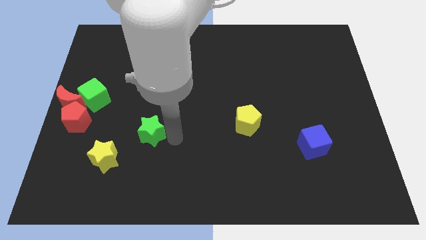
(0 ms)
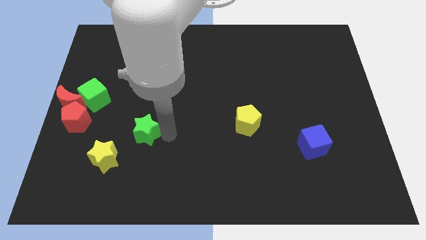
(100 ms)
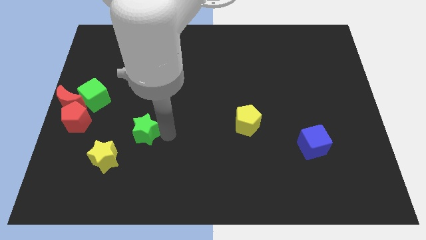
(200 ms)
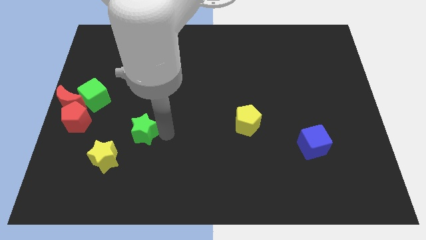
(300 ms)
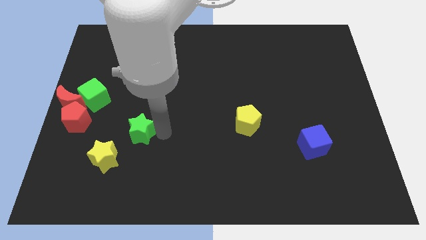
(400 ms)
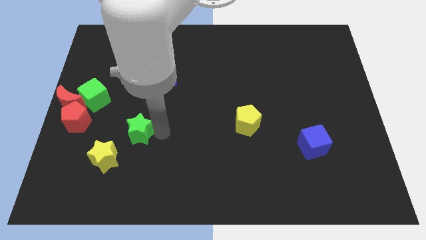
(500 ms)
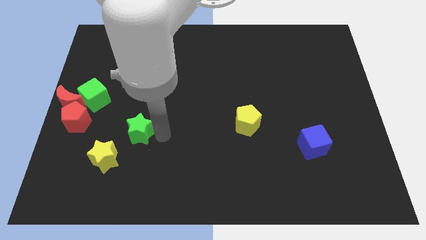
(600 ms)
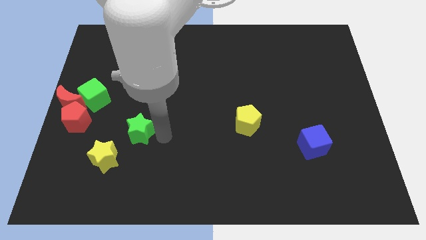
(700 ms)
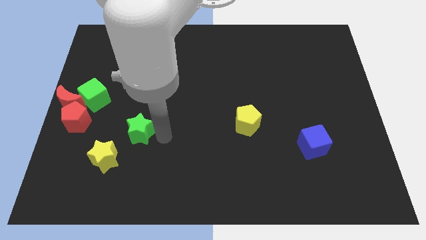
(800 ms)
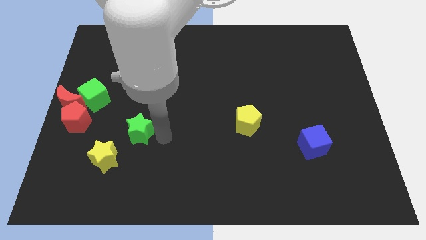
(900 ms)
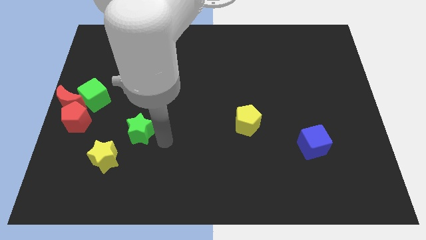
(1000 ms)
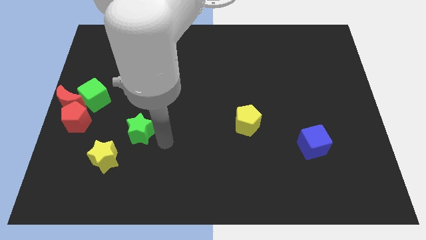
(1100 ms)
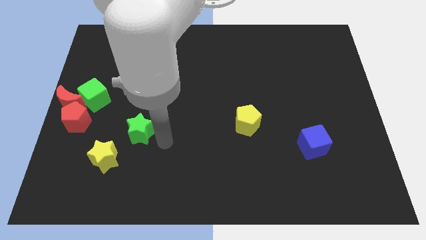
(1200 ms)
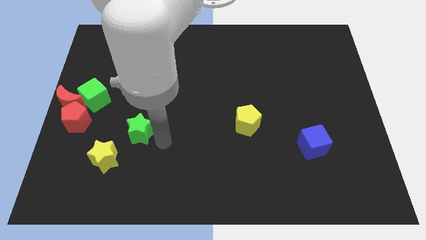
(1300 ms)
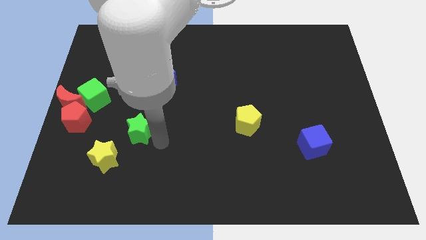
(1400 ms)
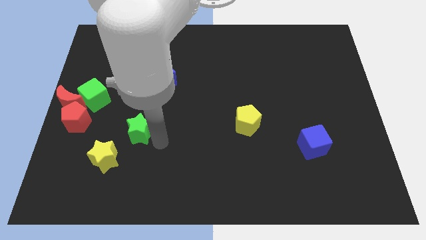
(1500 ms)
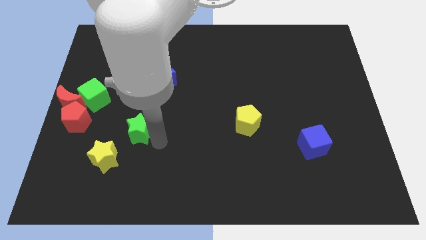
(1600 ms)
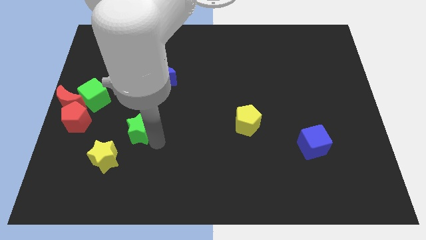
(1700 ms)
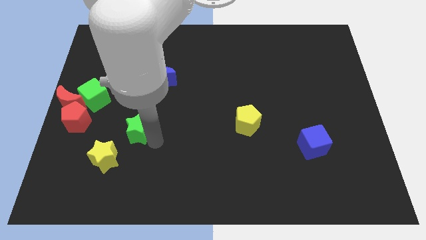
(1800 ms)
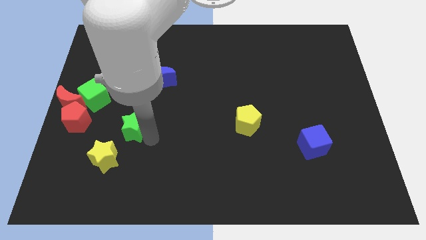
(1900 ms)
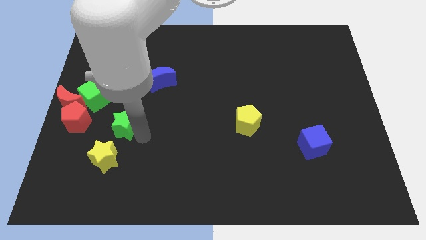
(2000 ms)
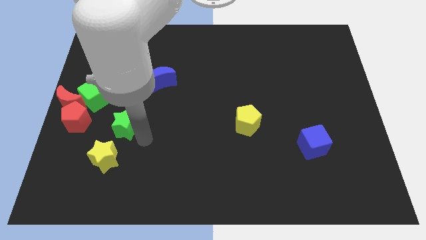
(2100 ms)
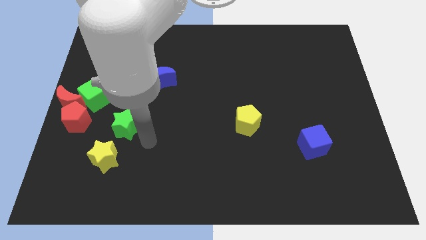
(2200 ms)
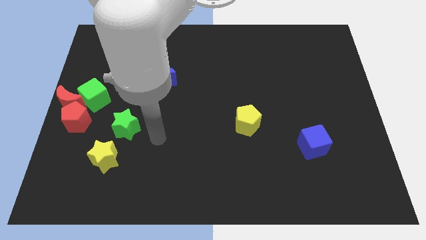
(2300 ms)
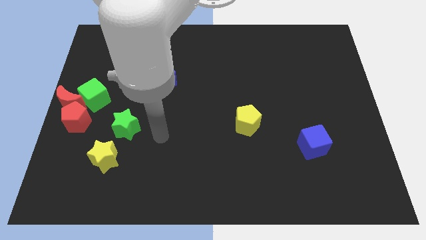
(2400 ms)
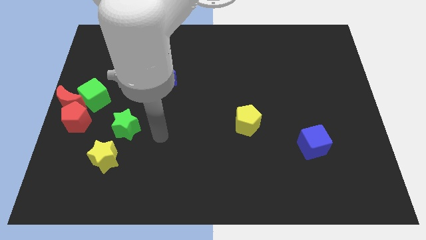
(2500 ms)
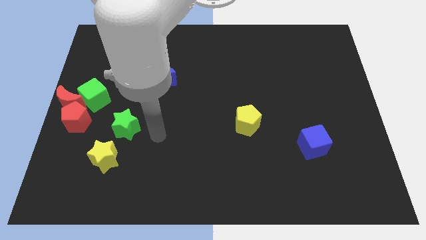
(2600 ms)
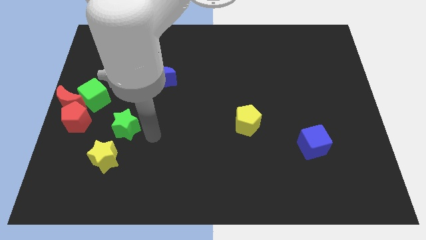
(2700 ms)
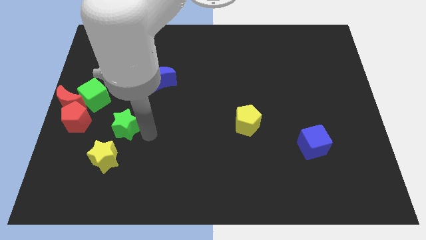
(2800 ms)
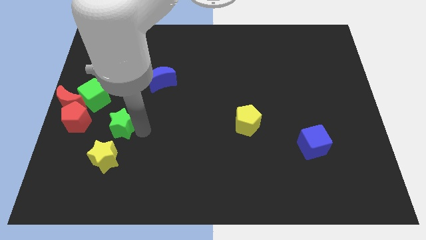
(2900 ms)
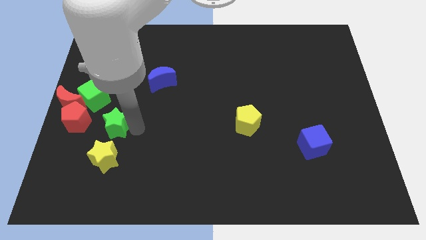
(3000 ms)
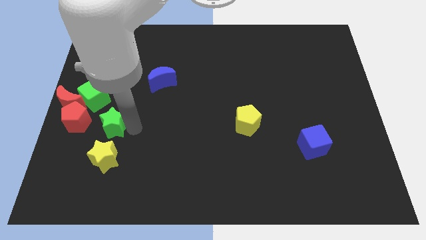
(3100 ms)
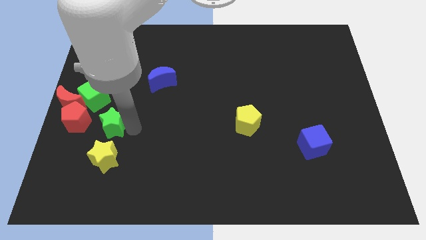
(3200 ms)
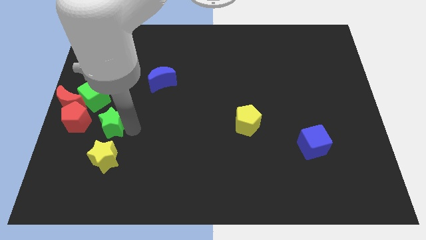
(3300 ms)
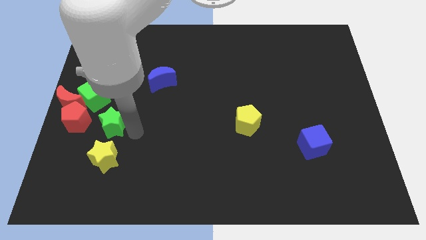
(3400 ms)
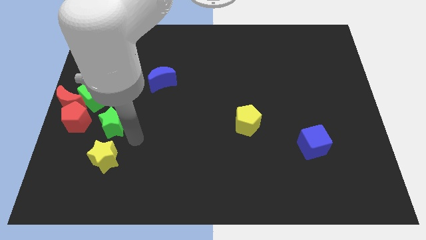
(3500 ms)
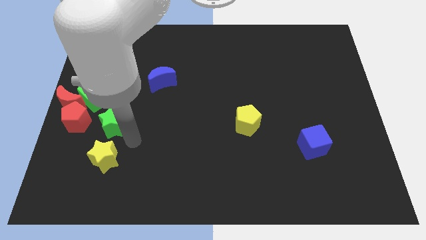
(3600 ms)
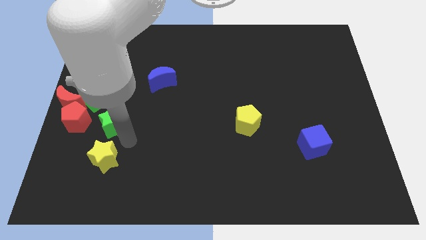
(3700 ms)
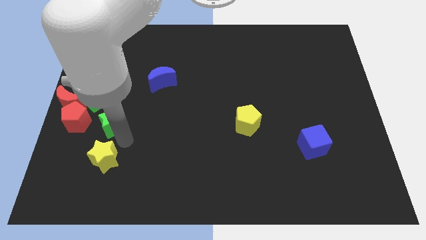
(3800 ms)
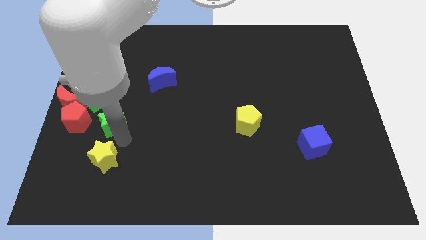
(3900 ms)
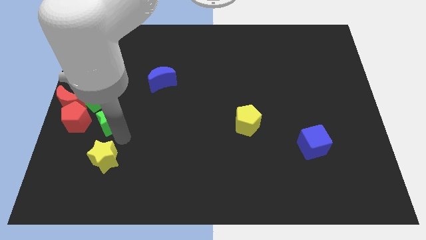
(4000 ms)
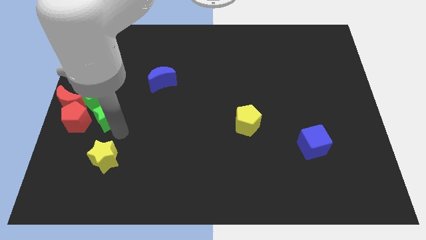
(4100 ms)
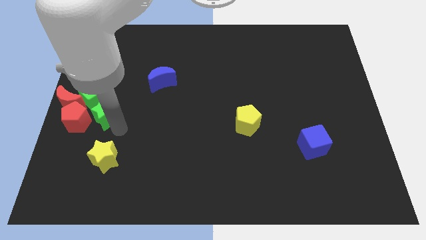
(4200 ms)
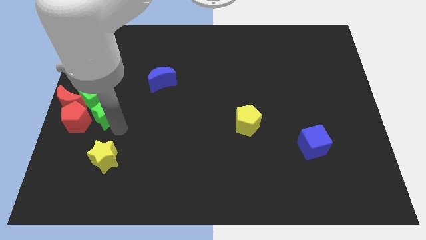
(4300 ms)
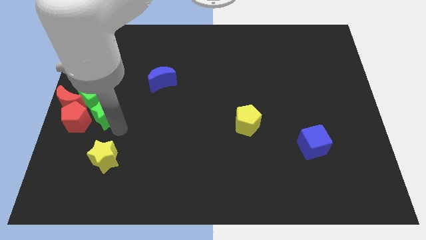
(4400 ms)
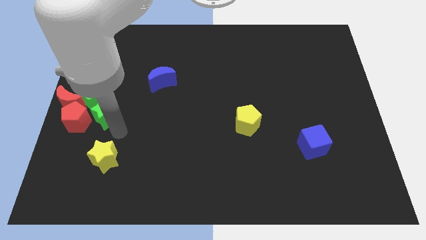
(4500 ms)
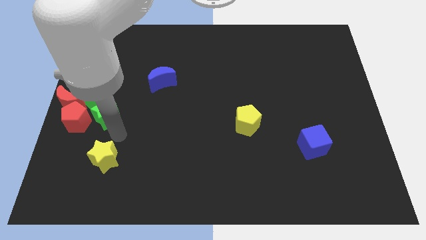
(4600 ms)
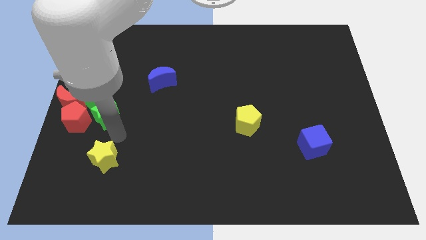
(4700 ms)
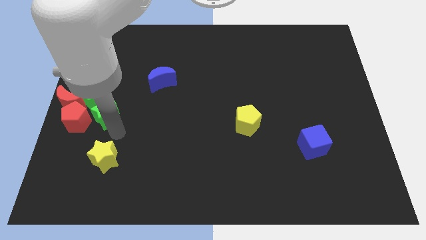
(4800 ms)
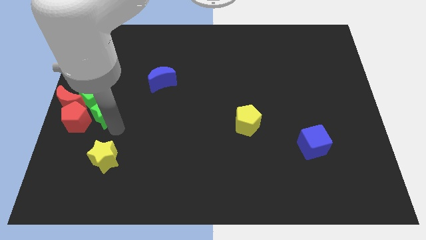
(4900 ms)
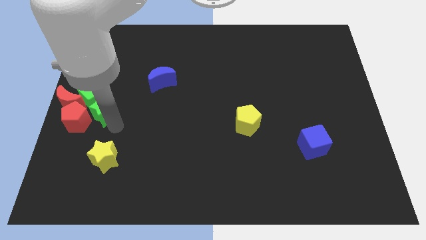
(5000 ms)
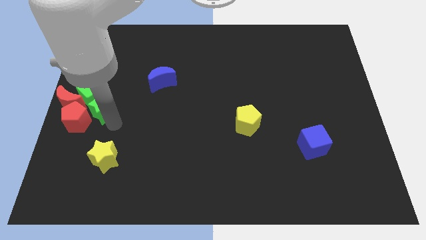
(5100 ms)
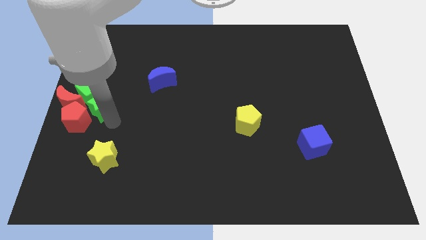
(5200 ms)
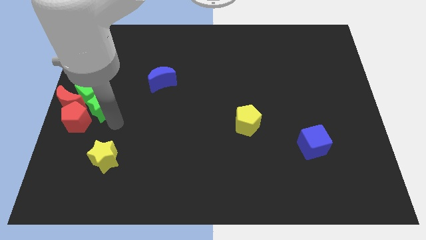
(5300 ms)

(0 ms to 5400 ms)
move the green star into the group of red and green blocks

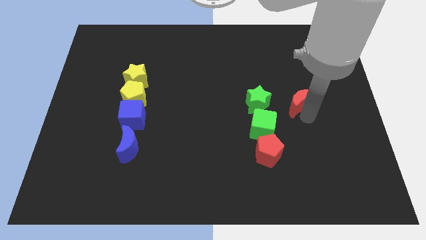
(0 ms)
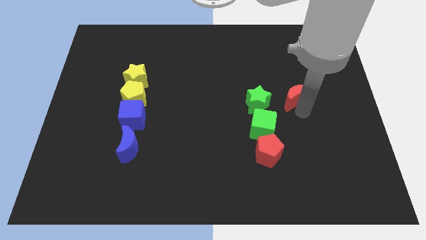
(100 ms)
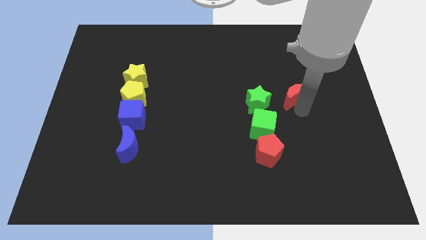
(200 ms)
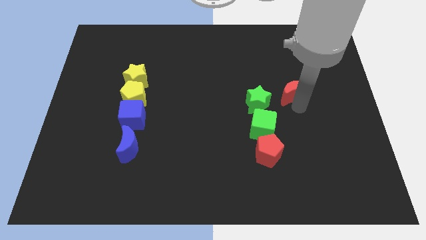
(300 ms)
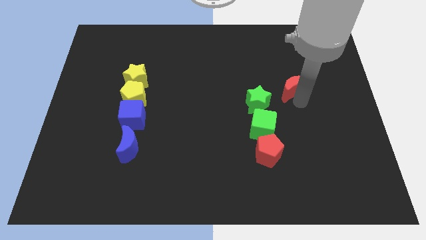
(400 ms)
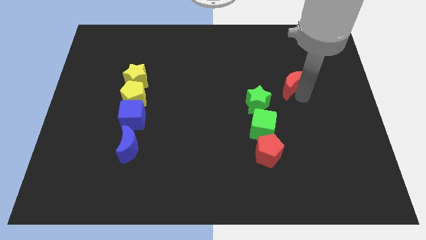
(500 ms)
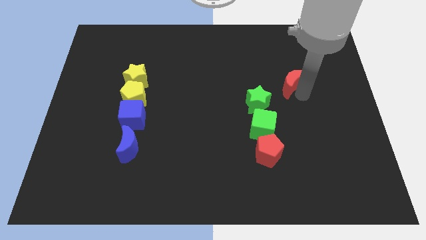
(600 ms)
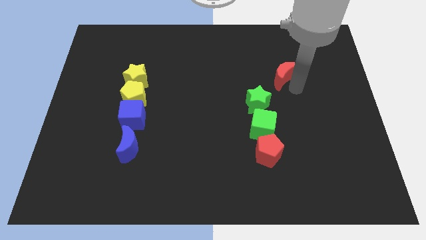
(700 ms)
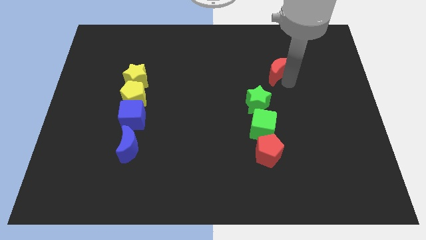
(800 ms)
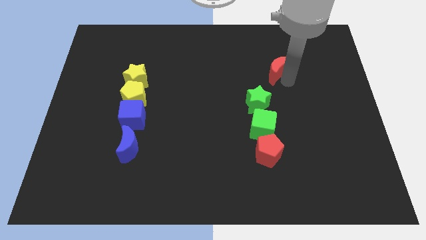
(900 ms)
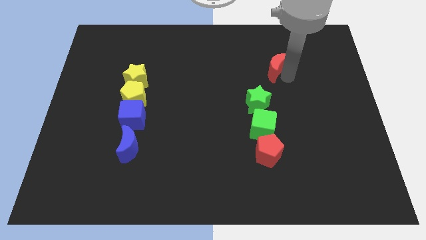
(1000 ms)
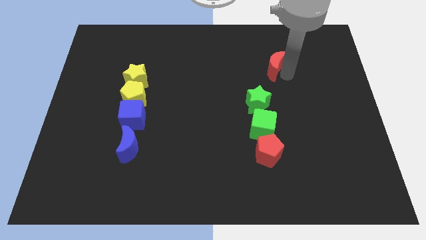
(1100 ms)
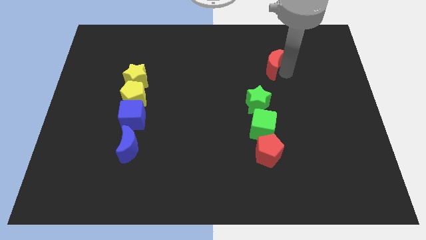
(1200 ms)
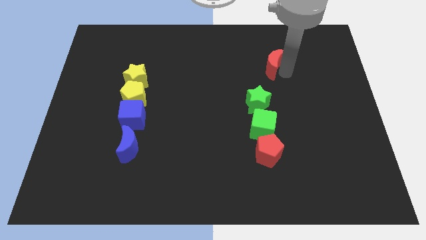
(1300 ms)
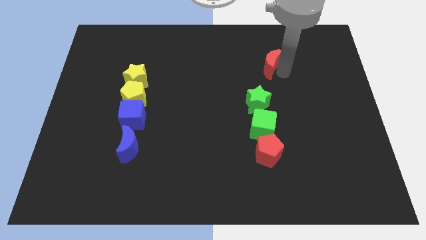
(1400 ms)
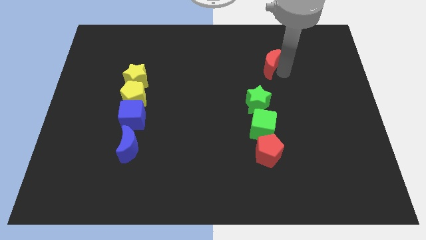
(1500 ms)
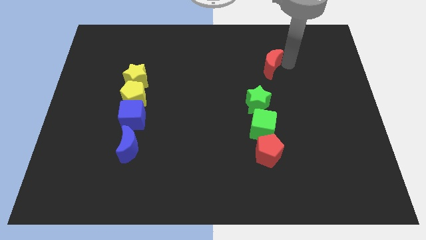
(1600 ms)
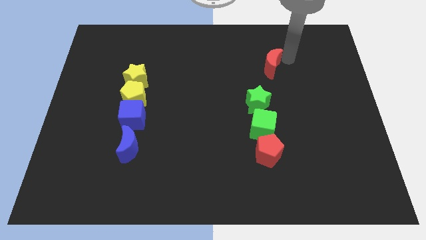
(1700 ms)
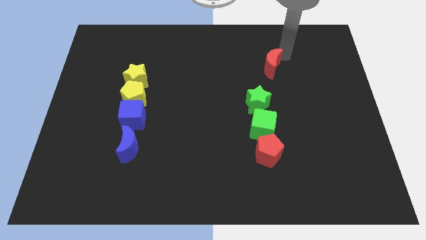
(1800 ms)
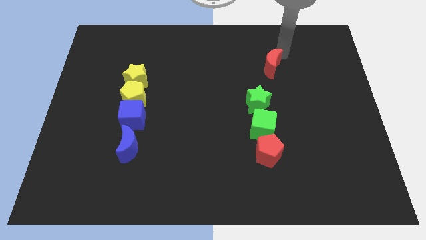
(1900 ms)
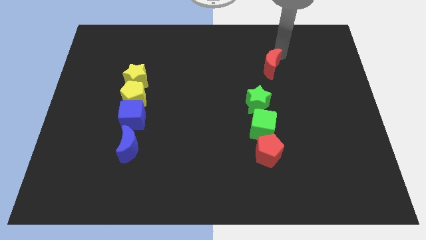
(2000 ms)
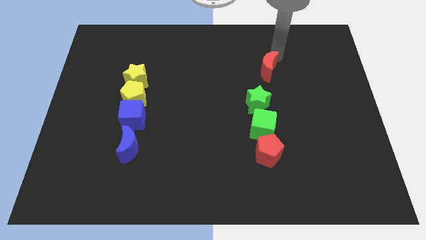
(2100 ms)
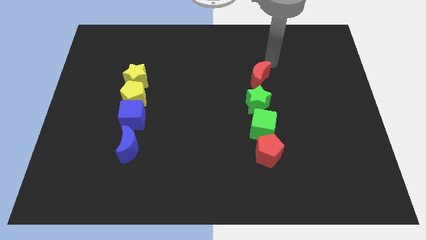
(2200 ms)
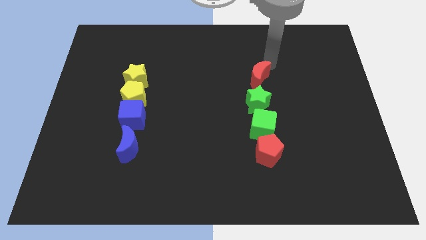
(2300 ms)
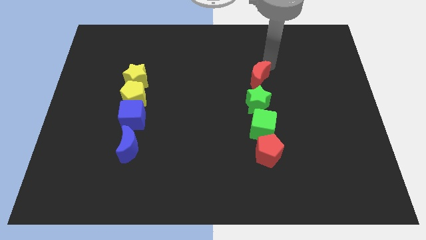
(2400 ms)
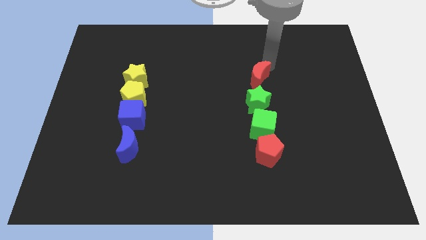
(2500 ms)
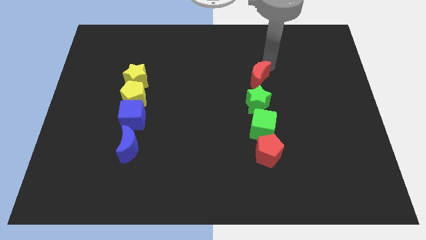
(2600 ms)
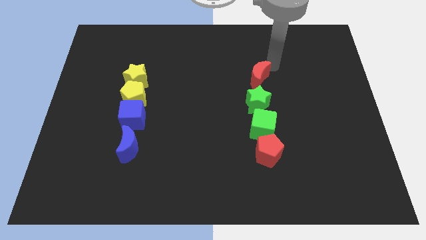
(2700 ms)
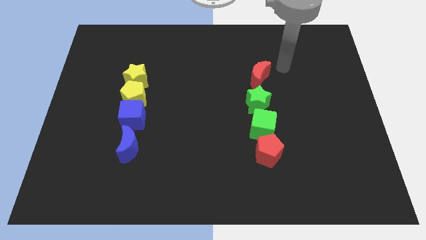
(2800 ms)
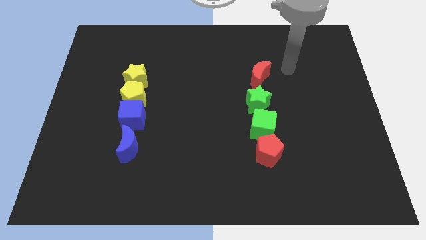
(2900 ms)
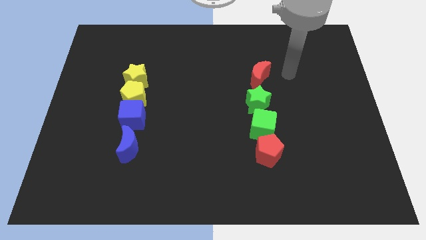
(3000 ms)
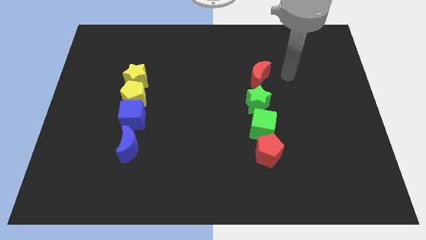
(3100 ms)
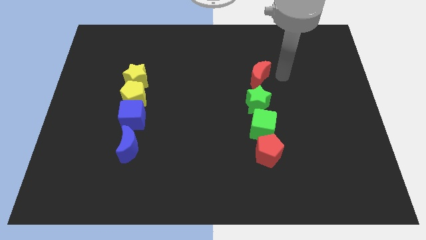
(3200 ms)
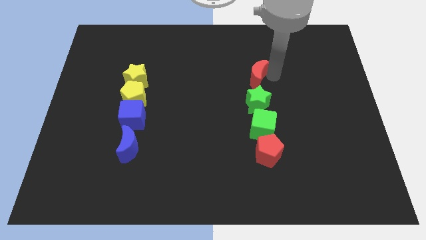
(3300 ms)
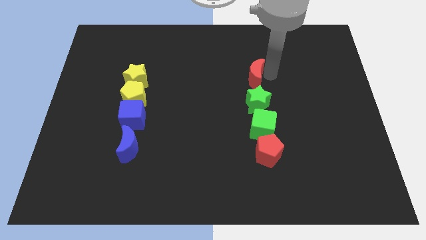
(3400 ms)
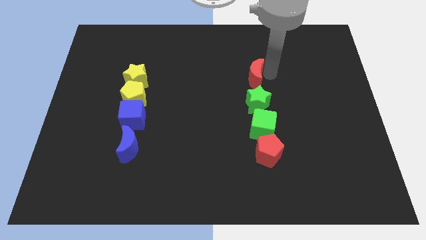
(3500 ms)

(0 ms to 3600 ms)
move red moon above green star
